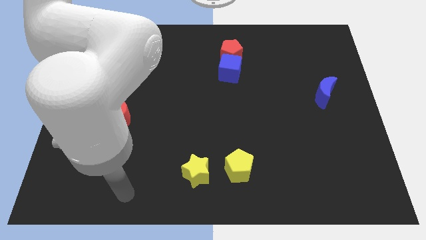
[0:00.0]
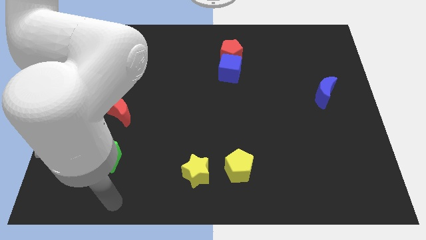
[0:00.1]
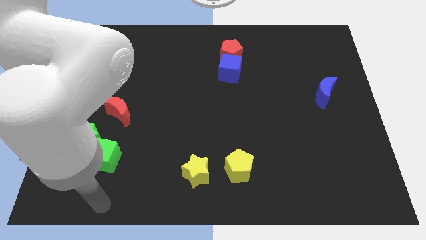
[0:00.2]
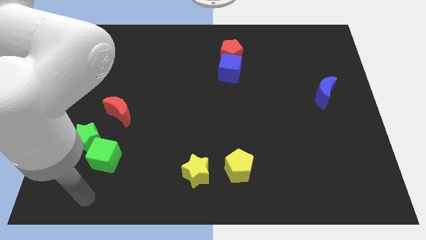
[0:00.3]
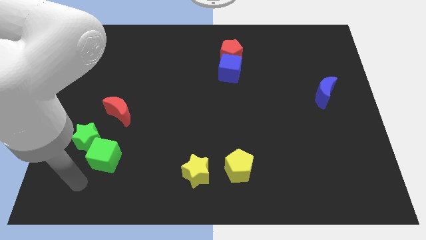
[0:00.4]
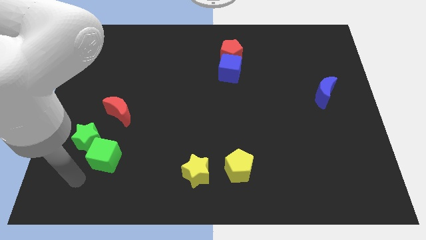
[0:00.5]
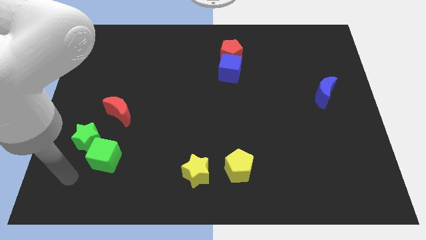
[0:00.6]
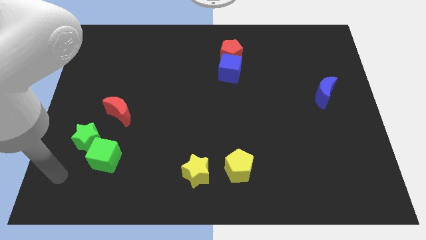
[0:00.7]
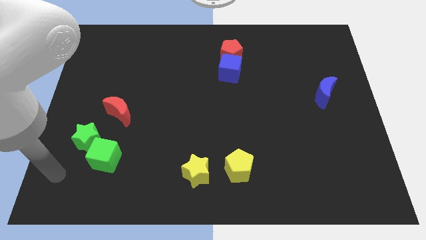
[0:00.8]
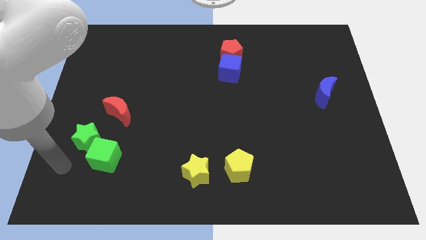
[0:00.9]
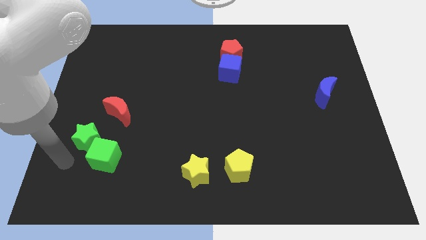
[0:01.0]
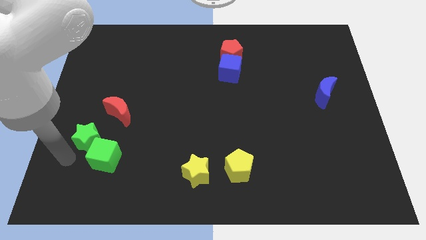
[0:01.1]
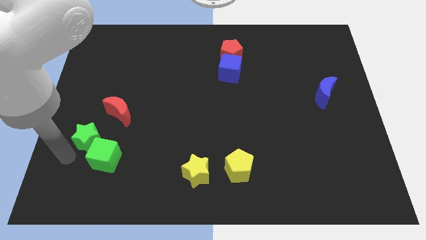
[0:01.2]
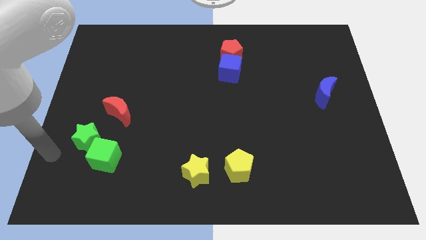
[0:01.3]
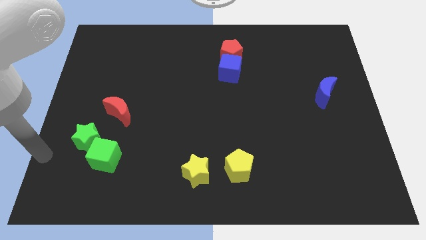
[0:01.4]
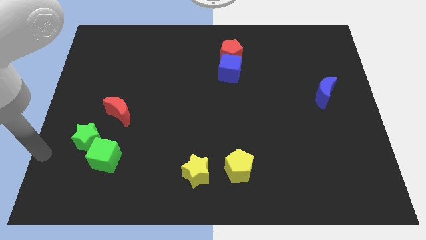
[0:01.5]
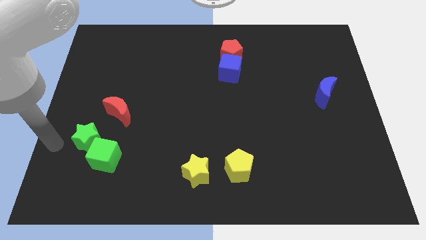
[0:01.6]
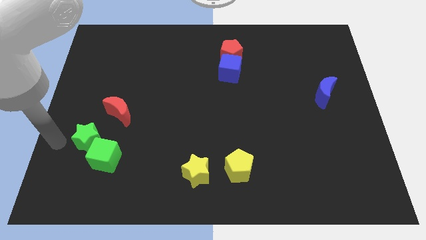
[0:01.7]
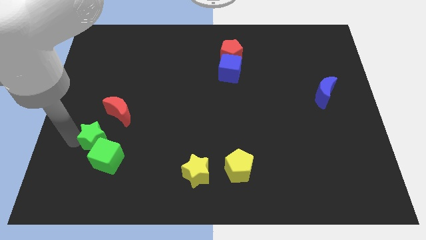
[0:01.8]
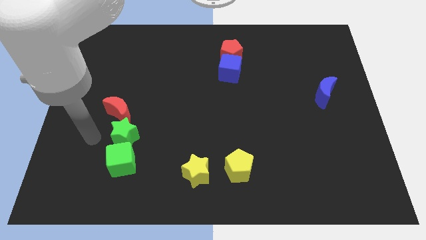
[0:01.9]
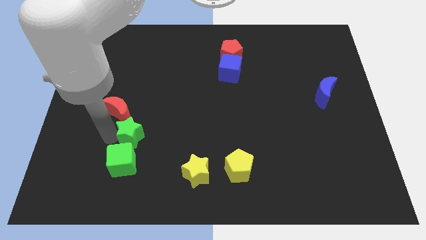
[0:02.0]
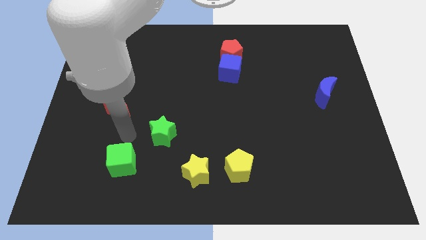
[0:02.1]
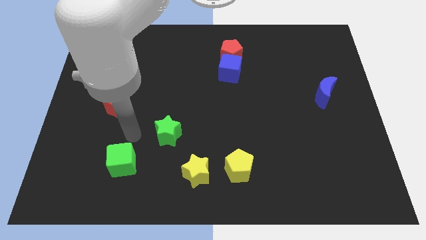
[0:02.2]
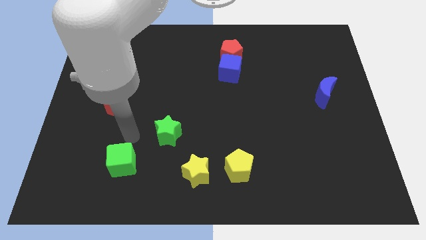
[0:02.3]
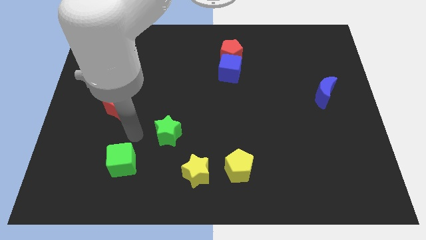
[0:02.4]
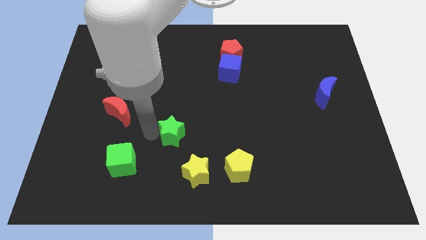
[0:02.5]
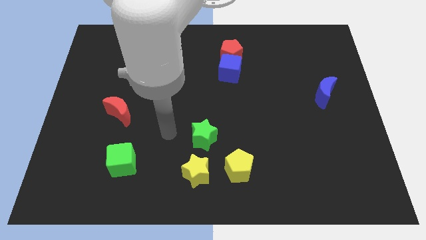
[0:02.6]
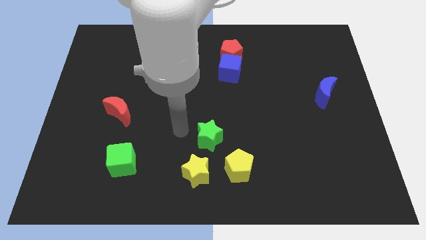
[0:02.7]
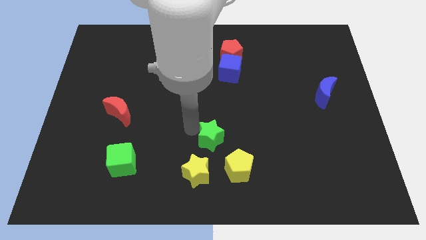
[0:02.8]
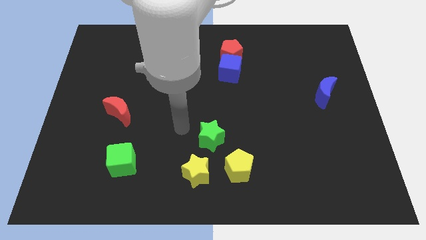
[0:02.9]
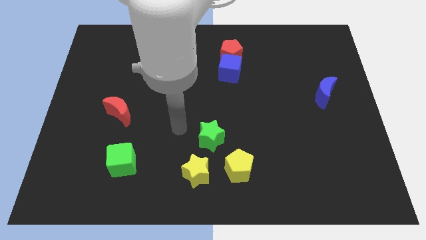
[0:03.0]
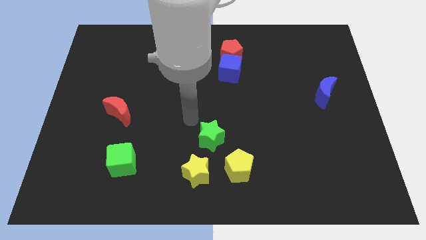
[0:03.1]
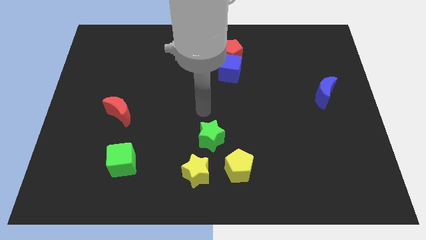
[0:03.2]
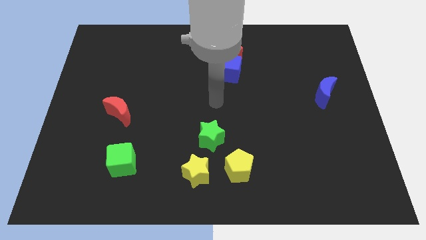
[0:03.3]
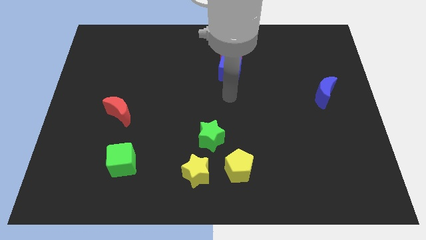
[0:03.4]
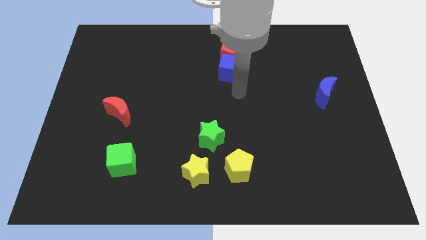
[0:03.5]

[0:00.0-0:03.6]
make a triangle with the green star and other two yellow blocks at the bottom center of the table

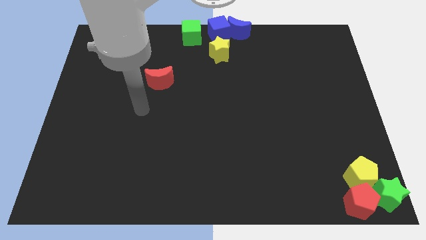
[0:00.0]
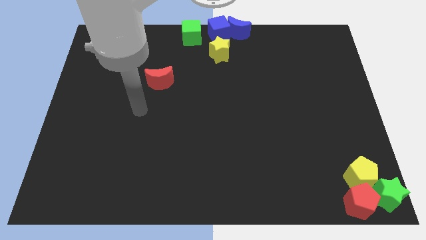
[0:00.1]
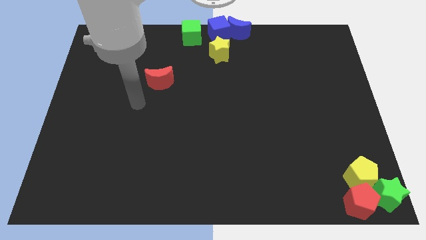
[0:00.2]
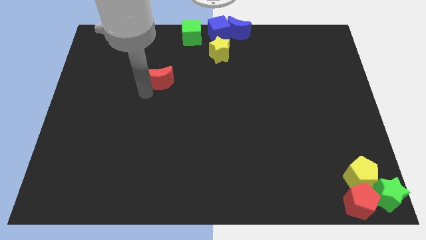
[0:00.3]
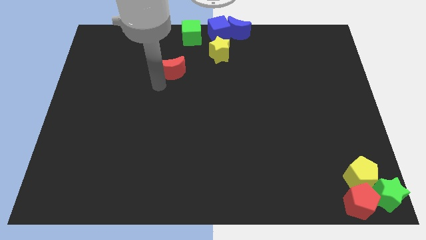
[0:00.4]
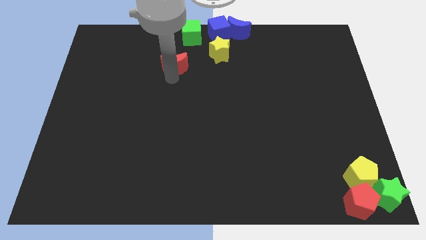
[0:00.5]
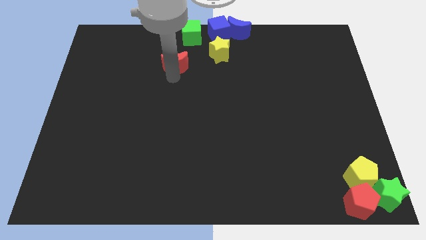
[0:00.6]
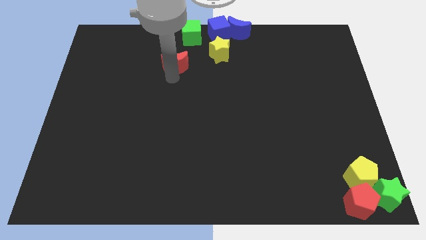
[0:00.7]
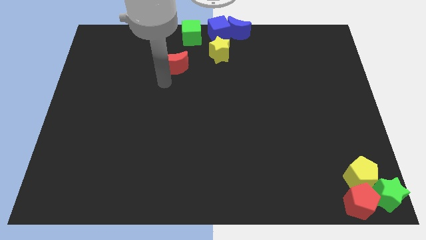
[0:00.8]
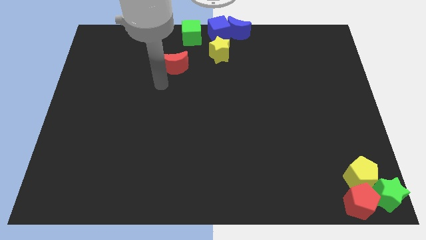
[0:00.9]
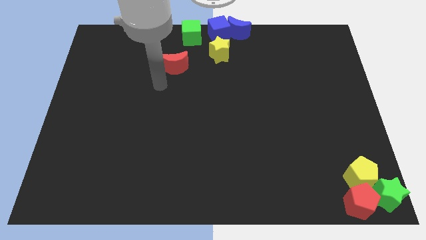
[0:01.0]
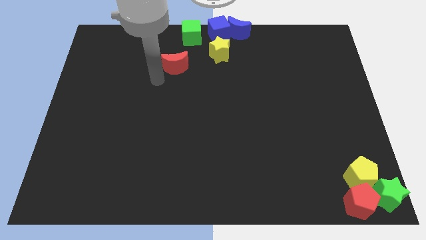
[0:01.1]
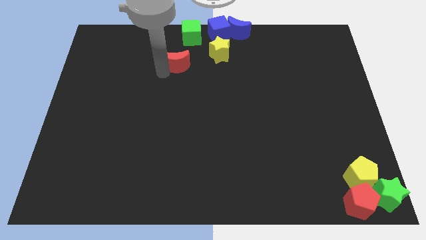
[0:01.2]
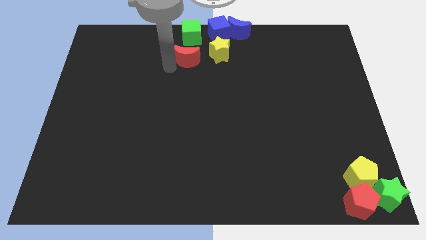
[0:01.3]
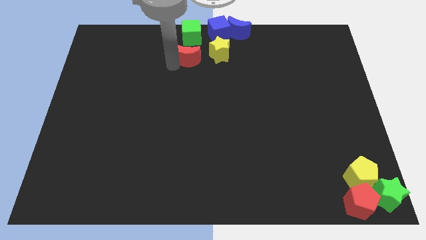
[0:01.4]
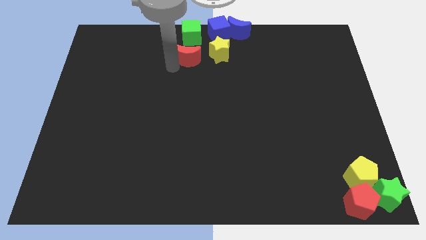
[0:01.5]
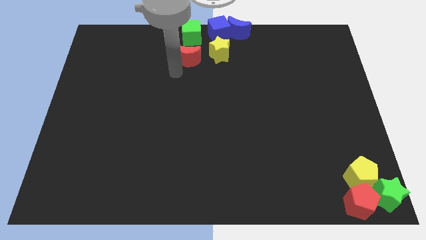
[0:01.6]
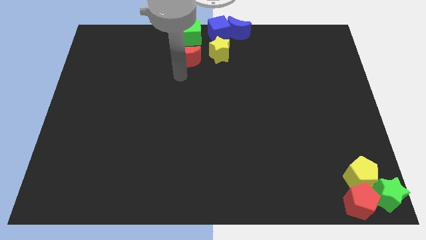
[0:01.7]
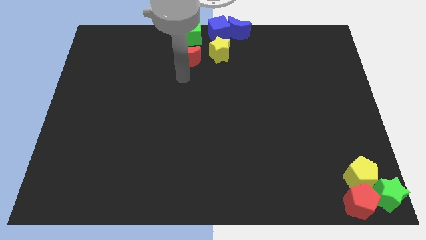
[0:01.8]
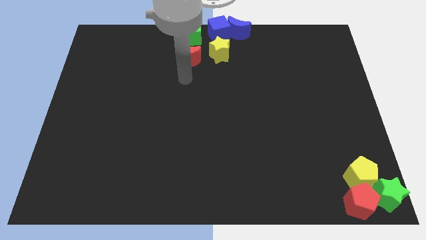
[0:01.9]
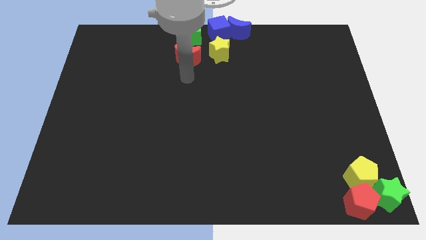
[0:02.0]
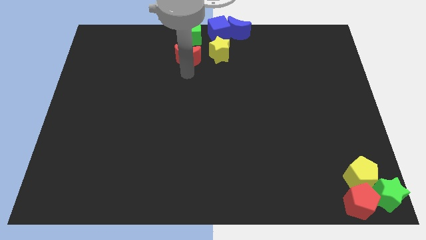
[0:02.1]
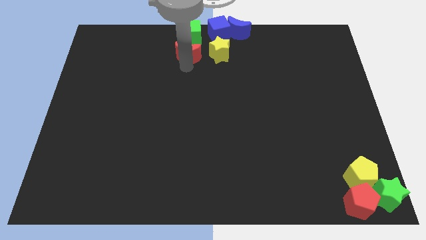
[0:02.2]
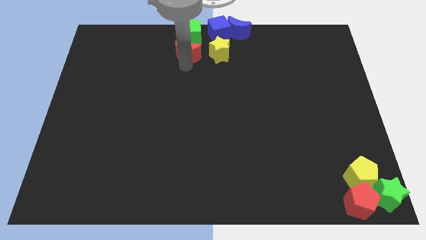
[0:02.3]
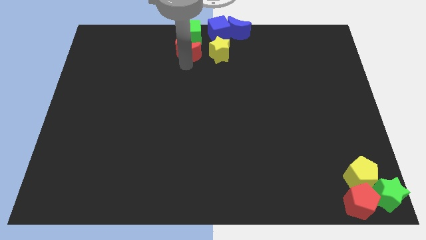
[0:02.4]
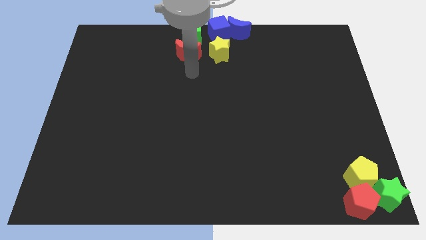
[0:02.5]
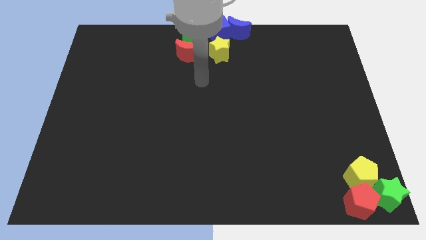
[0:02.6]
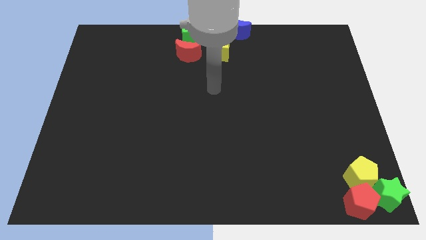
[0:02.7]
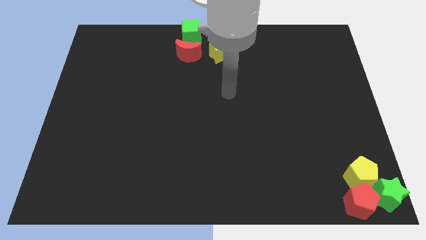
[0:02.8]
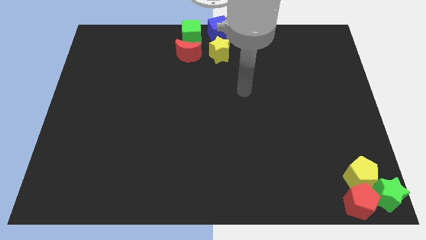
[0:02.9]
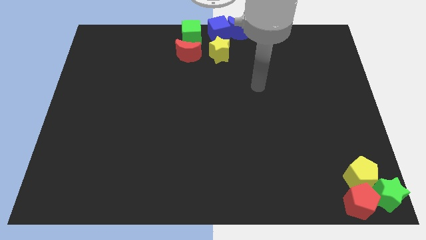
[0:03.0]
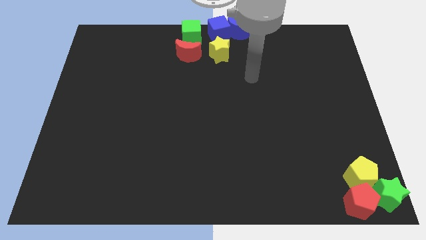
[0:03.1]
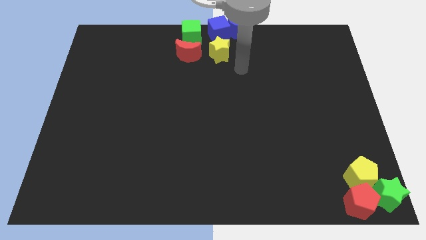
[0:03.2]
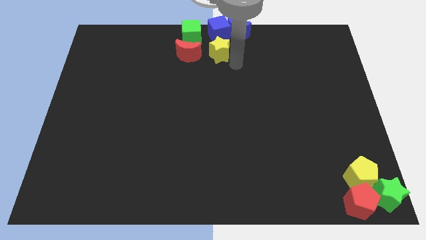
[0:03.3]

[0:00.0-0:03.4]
place the red moon at the bottom of green cube

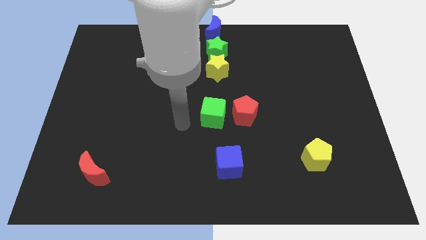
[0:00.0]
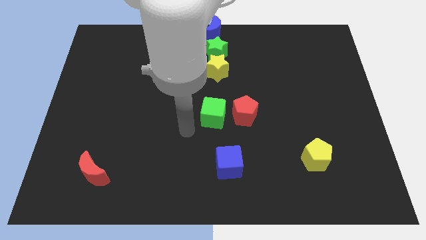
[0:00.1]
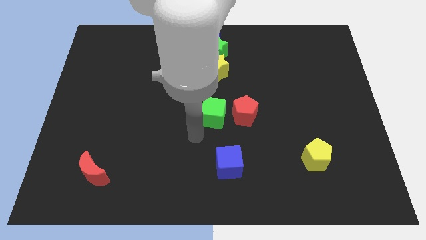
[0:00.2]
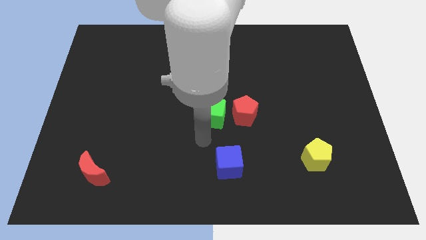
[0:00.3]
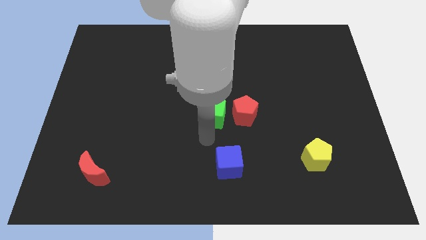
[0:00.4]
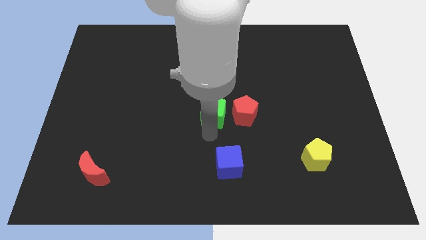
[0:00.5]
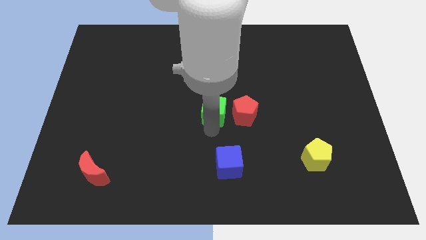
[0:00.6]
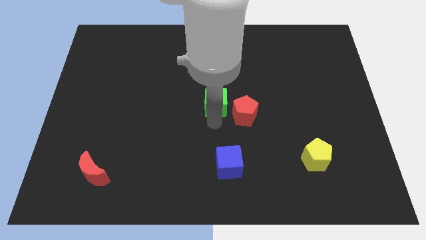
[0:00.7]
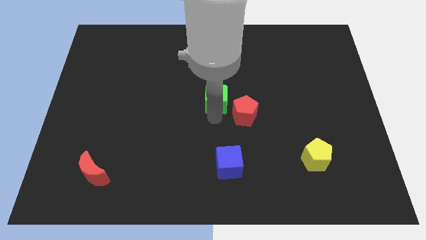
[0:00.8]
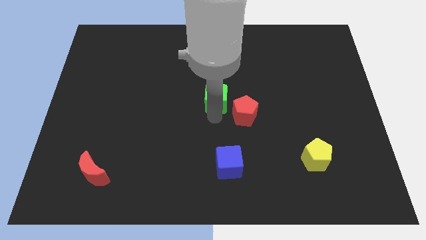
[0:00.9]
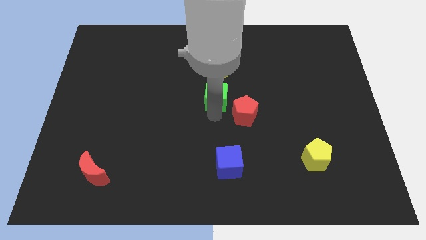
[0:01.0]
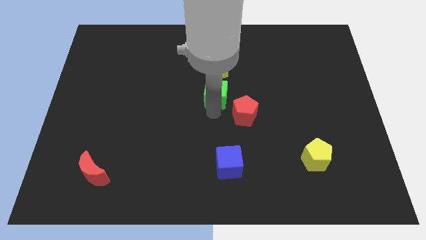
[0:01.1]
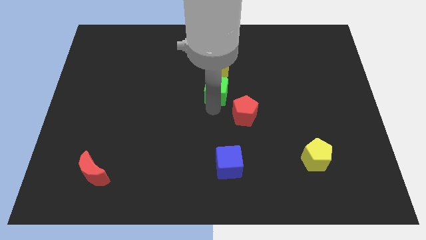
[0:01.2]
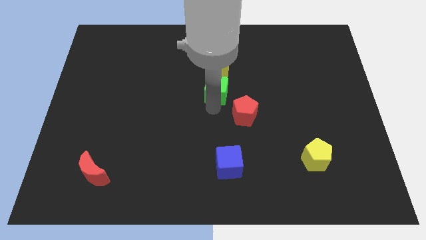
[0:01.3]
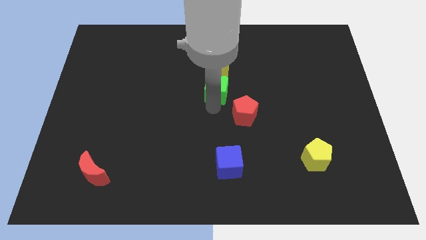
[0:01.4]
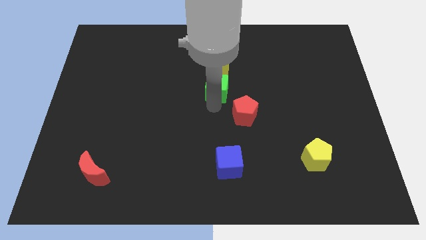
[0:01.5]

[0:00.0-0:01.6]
place the green cube to the top left to the red pentagon

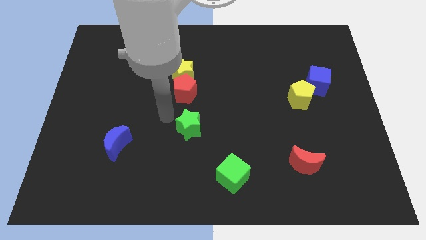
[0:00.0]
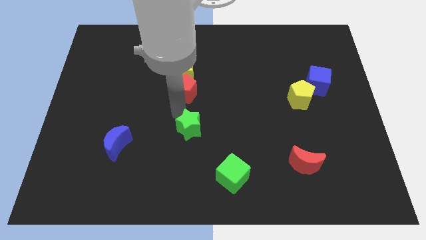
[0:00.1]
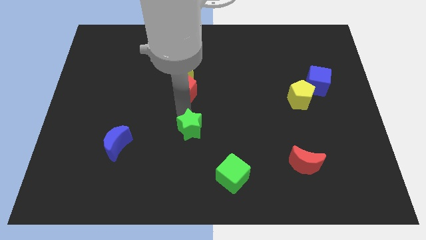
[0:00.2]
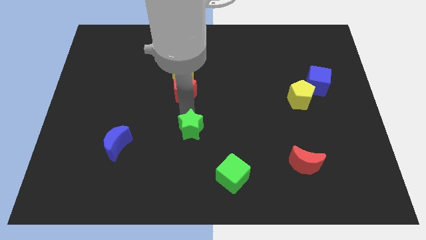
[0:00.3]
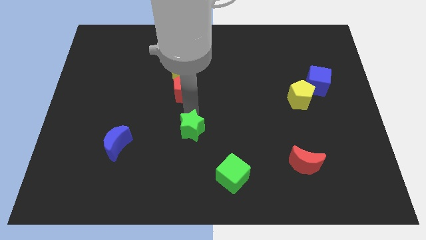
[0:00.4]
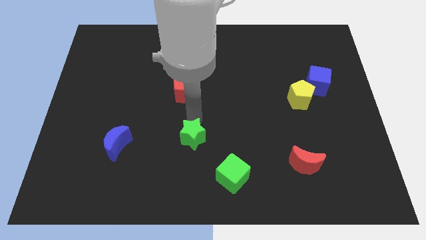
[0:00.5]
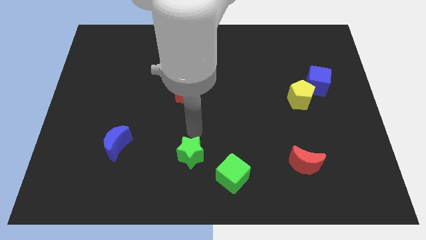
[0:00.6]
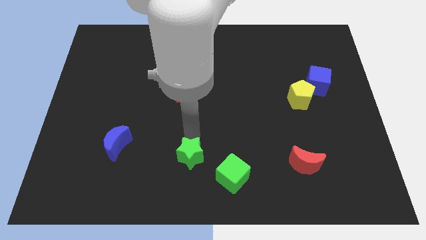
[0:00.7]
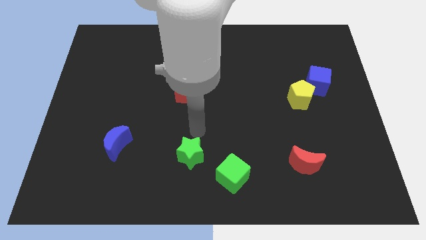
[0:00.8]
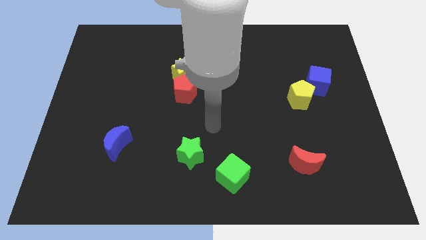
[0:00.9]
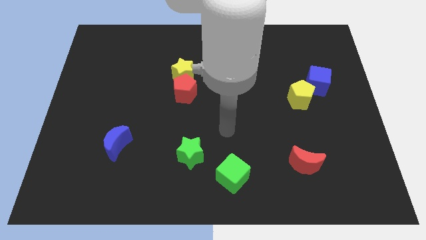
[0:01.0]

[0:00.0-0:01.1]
move green star towards green cube
